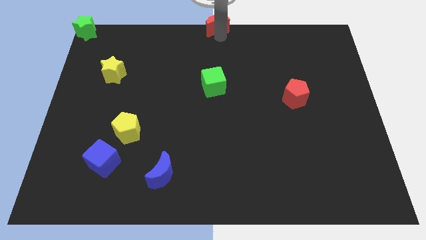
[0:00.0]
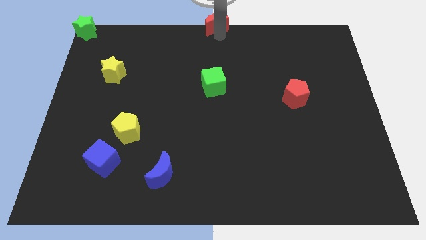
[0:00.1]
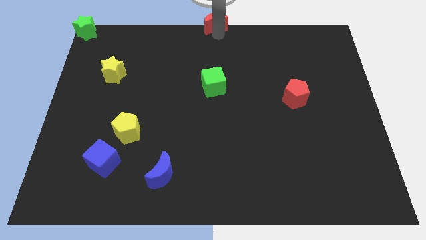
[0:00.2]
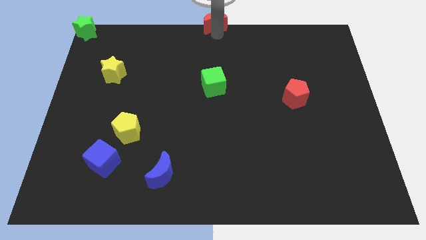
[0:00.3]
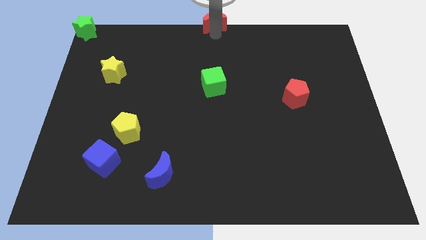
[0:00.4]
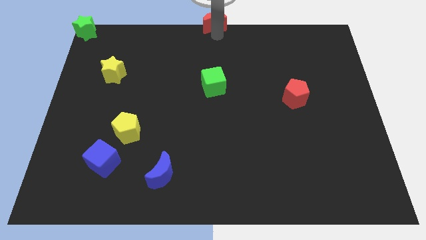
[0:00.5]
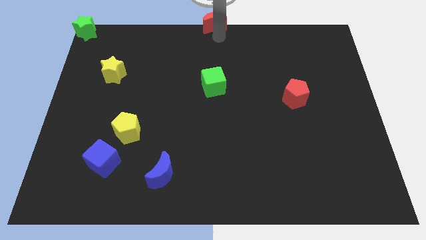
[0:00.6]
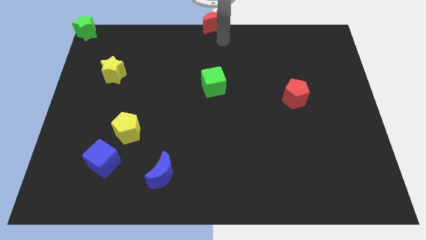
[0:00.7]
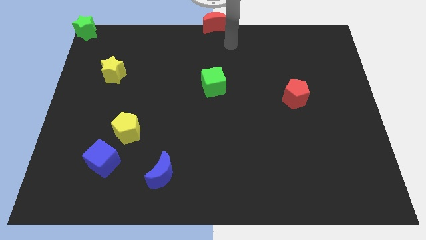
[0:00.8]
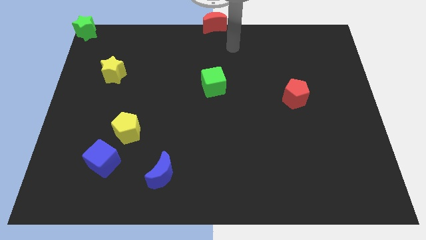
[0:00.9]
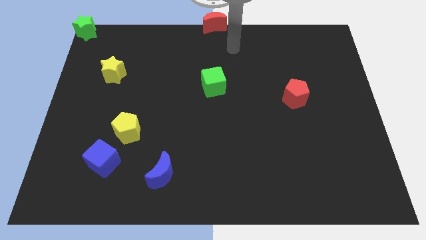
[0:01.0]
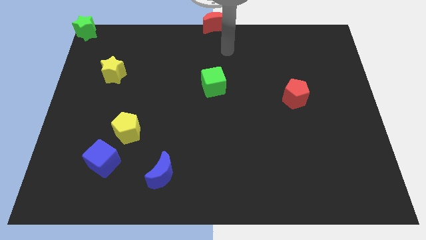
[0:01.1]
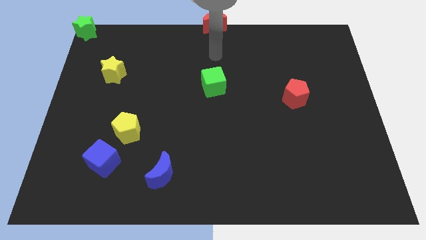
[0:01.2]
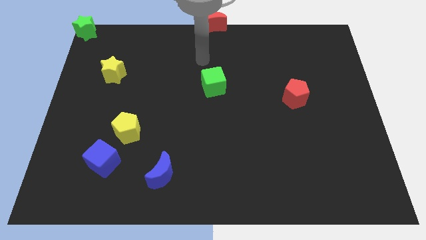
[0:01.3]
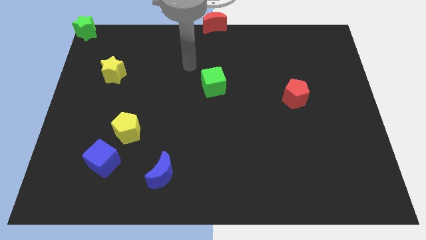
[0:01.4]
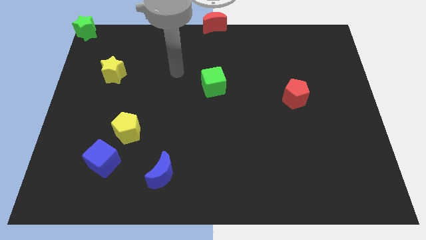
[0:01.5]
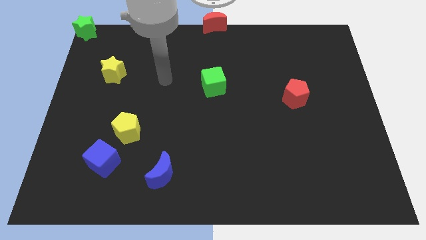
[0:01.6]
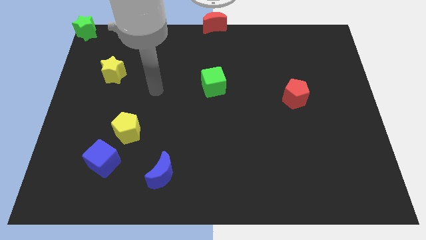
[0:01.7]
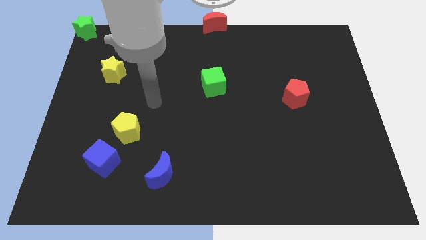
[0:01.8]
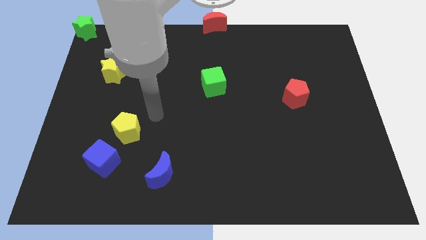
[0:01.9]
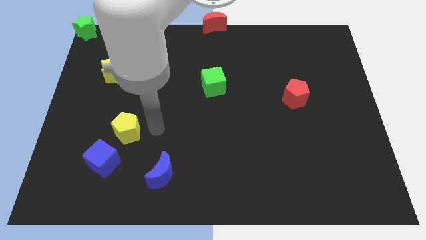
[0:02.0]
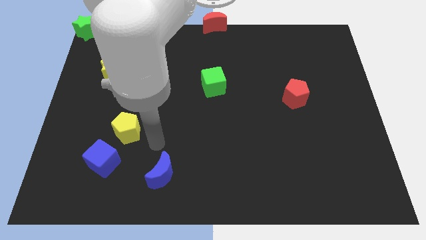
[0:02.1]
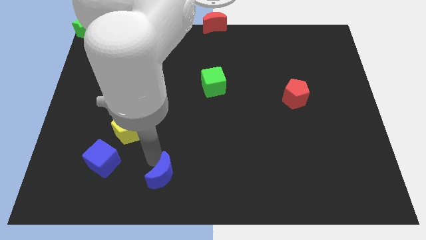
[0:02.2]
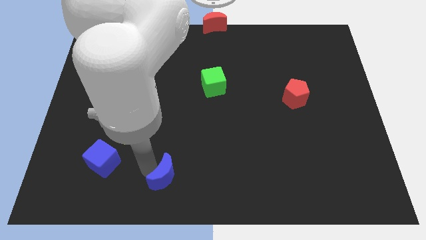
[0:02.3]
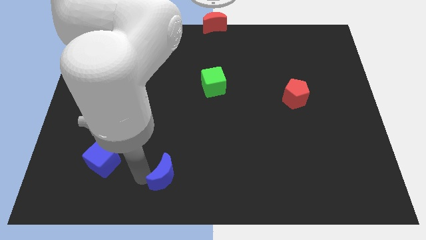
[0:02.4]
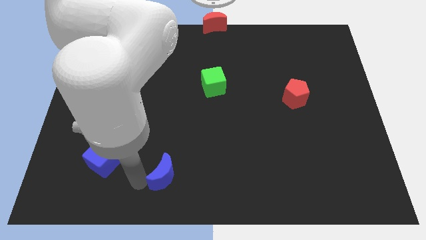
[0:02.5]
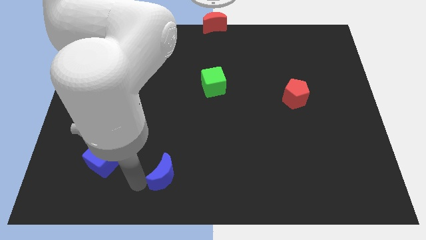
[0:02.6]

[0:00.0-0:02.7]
move the arm towards the bottom left of the blue crescent

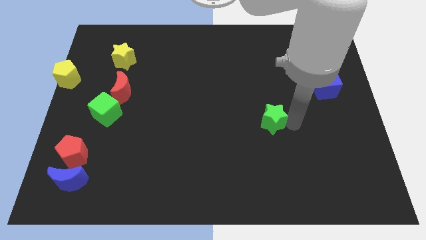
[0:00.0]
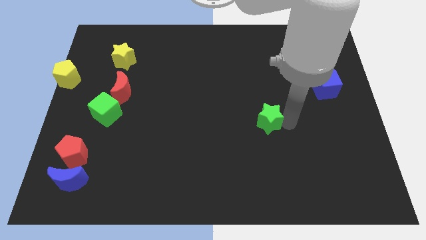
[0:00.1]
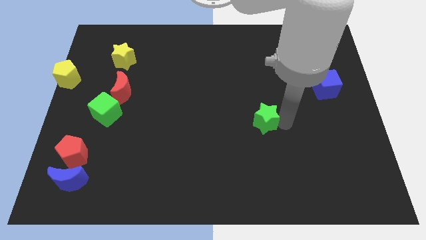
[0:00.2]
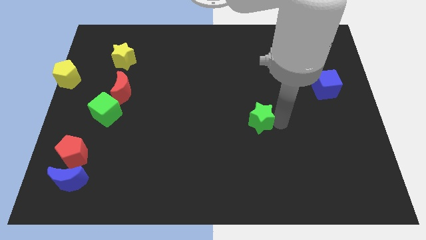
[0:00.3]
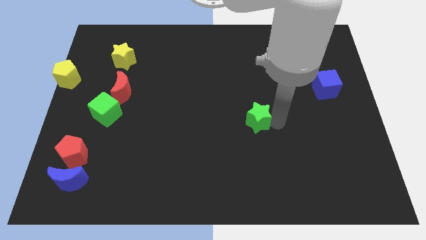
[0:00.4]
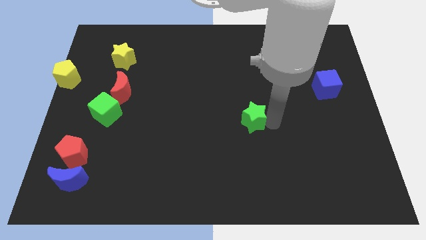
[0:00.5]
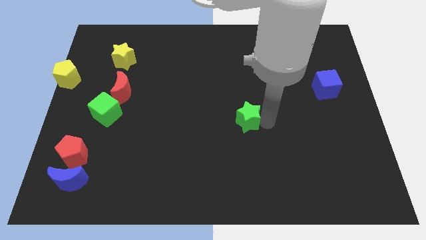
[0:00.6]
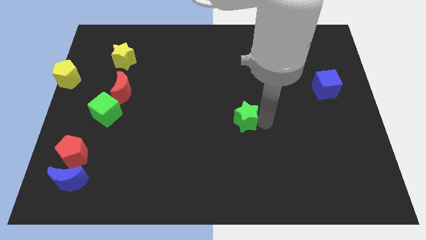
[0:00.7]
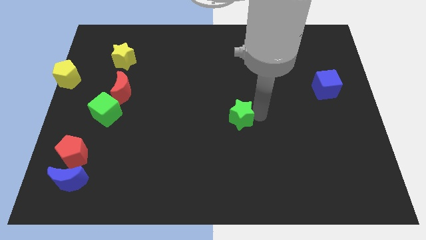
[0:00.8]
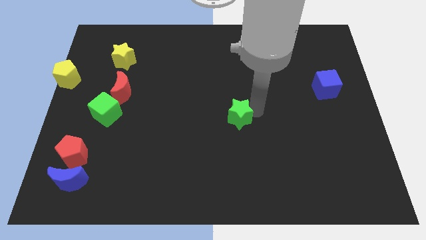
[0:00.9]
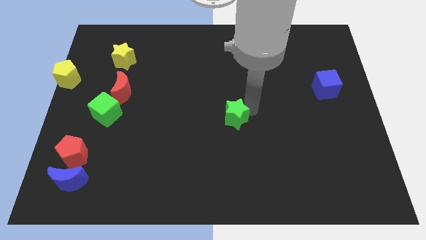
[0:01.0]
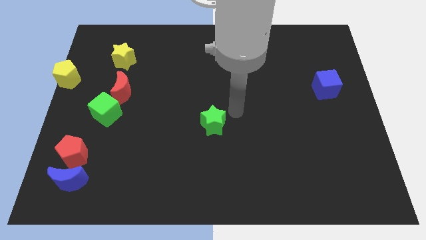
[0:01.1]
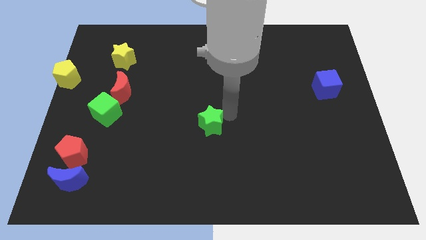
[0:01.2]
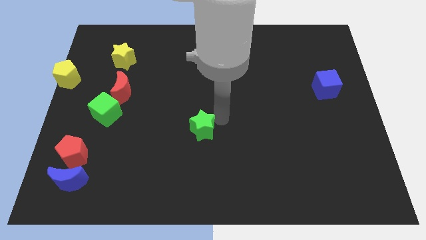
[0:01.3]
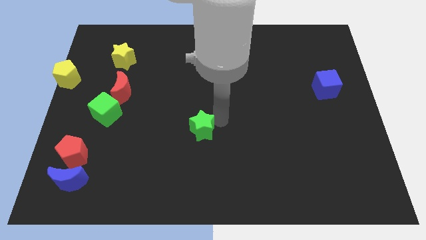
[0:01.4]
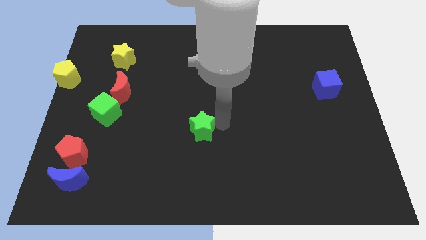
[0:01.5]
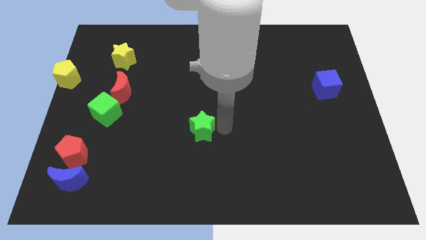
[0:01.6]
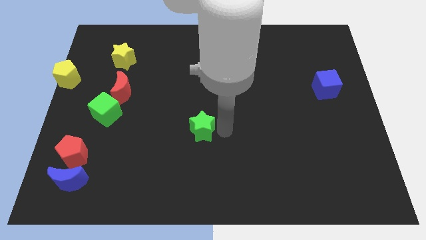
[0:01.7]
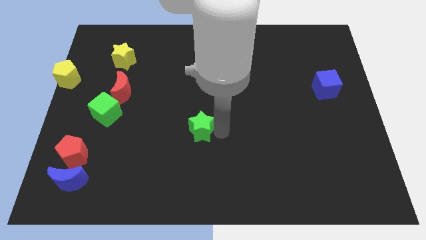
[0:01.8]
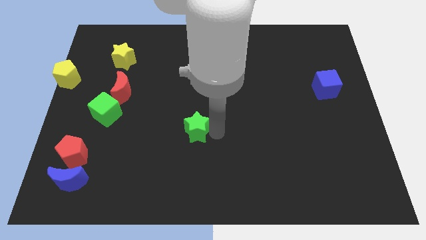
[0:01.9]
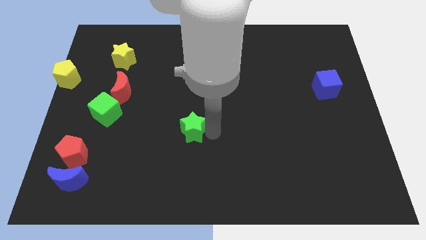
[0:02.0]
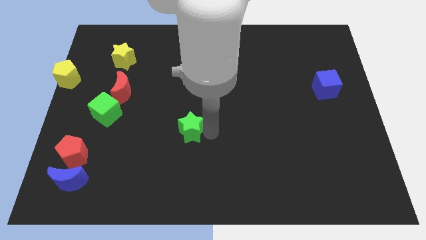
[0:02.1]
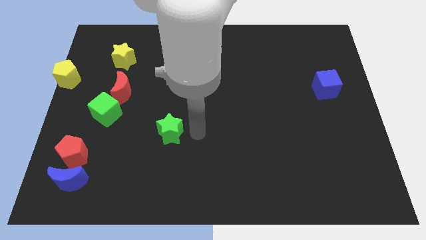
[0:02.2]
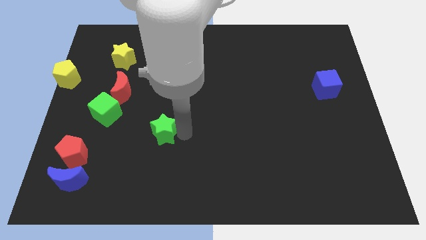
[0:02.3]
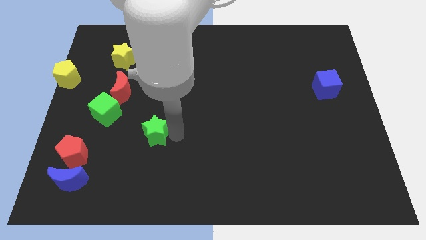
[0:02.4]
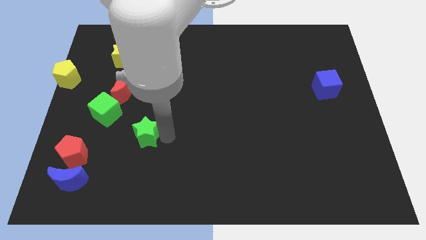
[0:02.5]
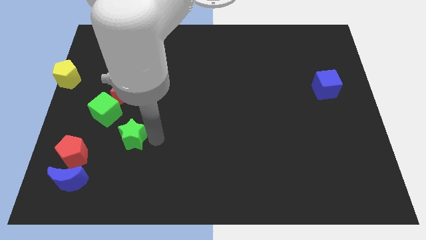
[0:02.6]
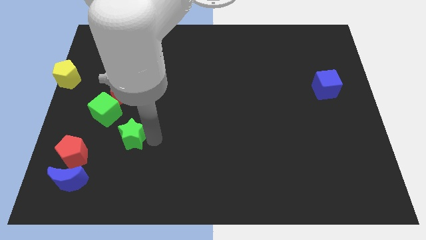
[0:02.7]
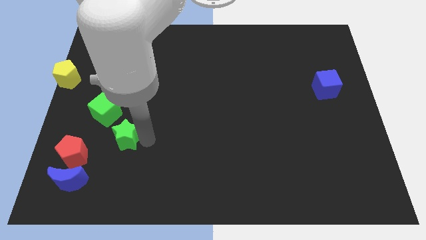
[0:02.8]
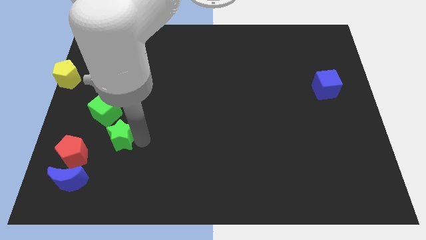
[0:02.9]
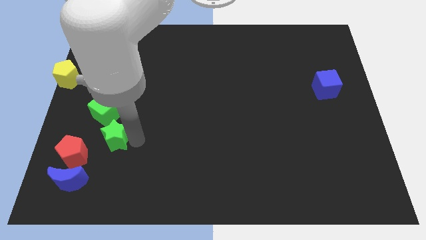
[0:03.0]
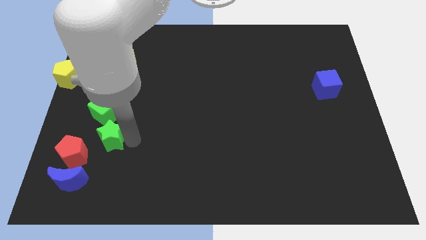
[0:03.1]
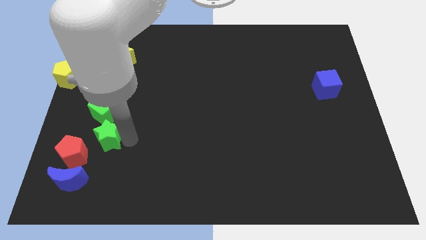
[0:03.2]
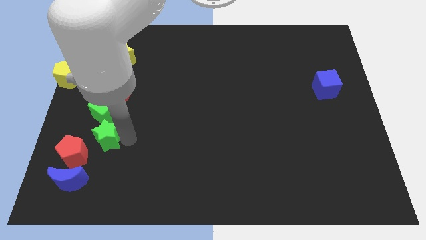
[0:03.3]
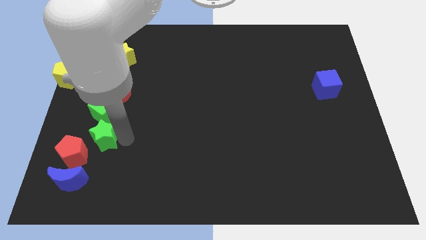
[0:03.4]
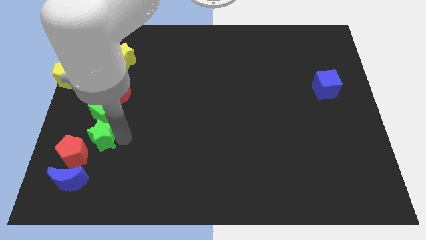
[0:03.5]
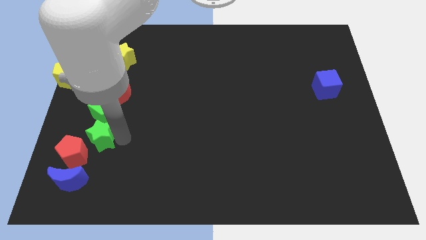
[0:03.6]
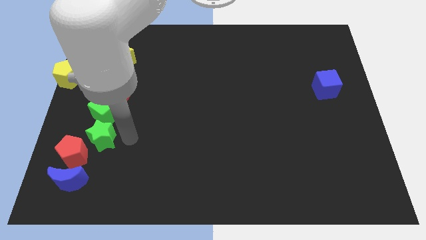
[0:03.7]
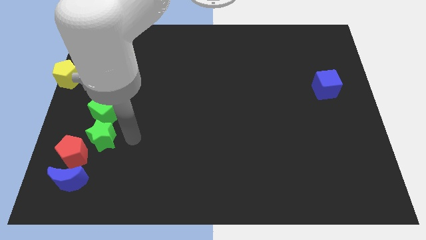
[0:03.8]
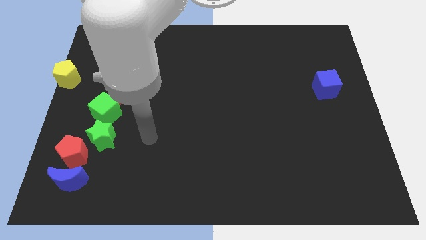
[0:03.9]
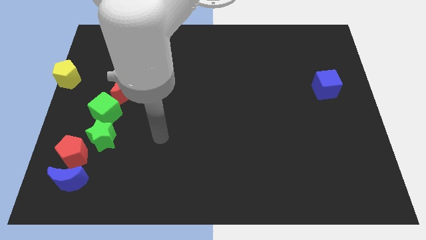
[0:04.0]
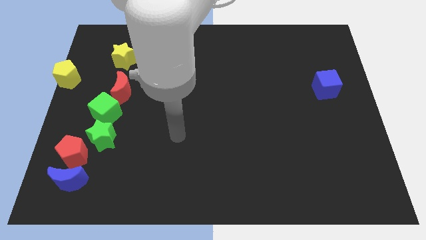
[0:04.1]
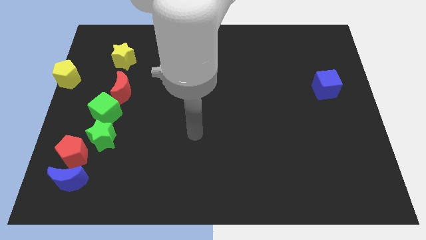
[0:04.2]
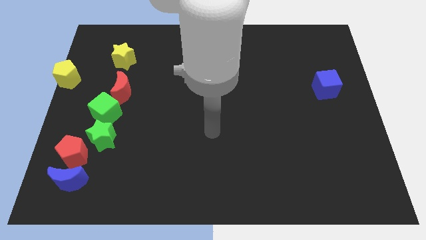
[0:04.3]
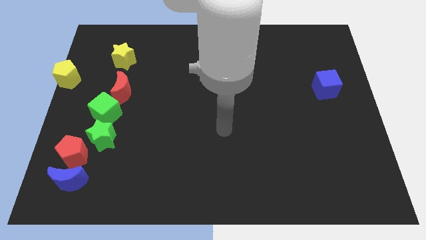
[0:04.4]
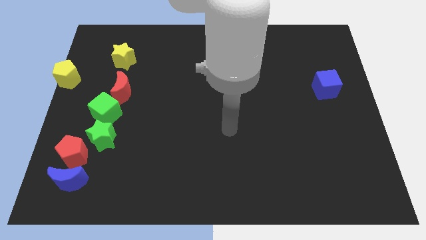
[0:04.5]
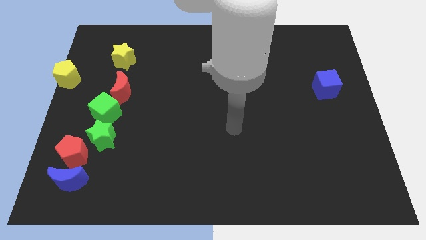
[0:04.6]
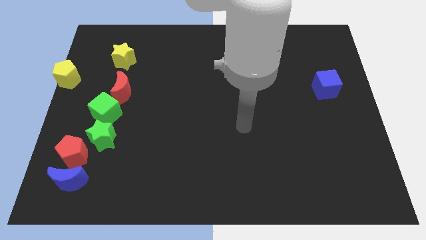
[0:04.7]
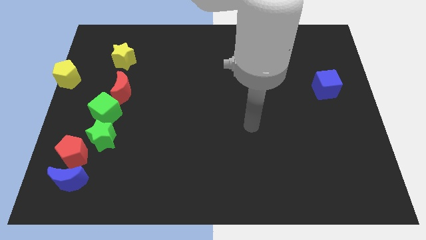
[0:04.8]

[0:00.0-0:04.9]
push the green star below the green cube

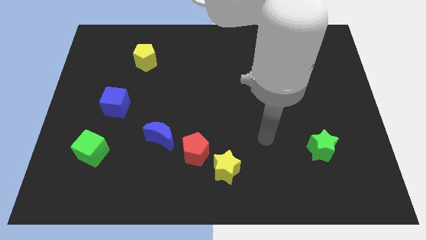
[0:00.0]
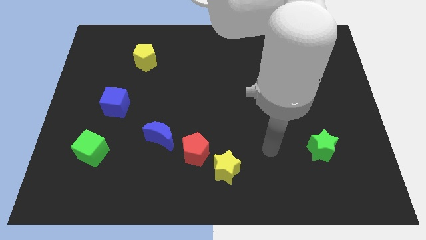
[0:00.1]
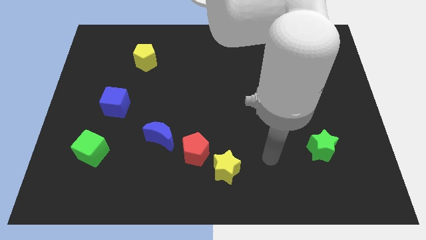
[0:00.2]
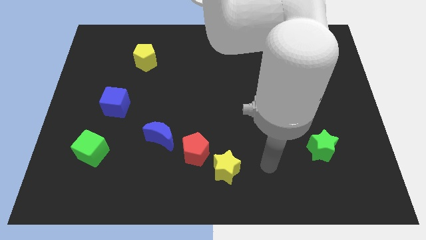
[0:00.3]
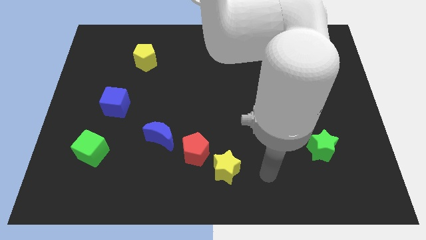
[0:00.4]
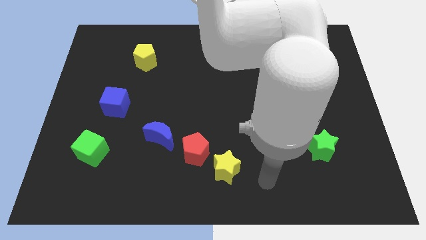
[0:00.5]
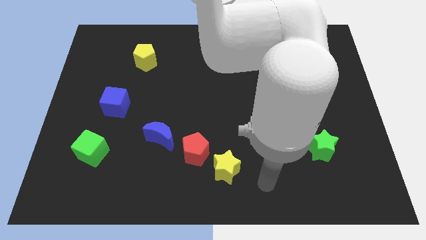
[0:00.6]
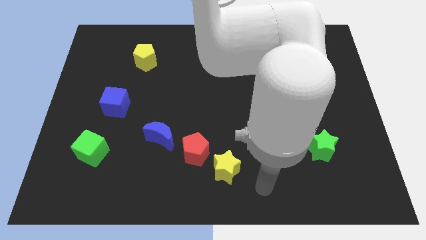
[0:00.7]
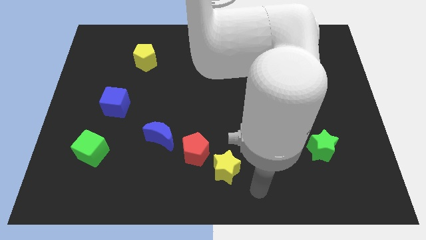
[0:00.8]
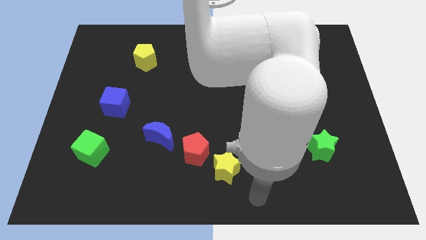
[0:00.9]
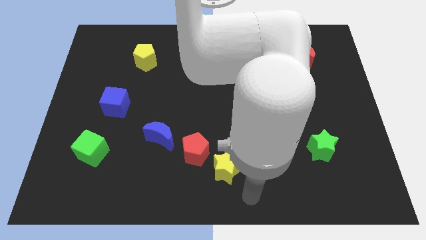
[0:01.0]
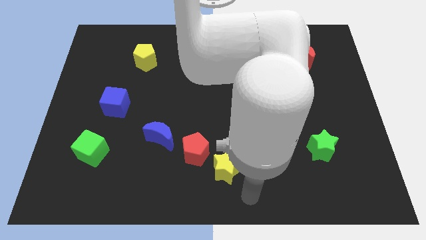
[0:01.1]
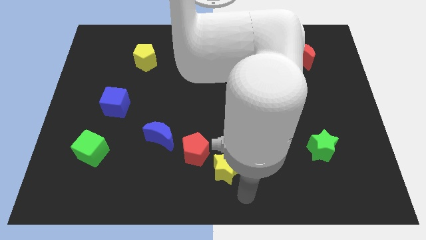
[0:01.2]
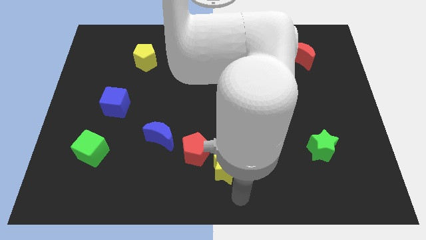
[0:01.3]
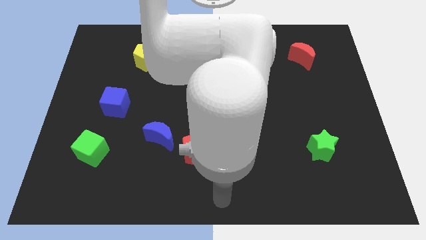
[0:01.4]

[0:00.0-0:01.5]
put arm at bottom center

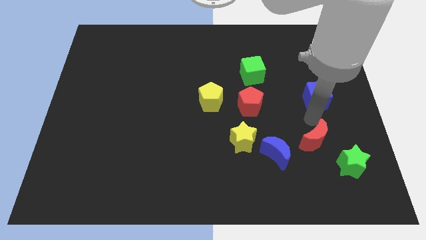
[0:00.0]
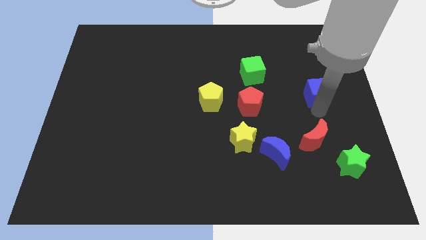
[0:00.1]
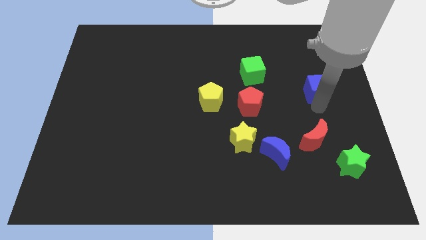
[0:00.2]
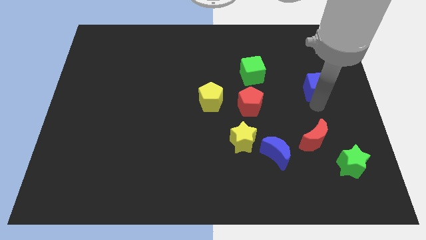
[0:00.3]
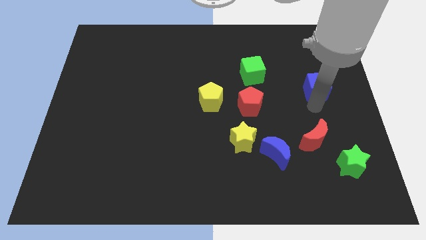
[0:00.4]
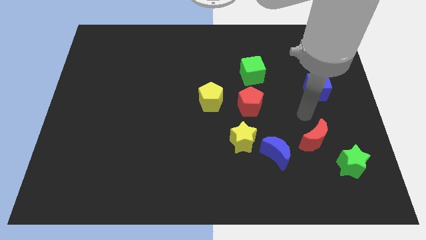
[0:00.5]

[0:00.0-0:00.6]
push the blue cube to the top of the board
